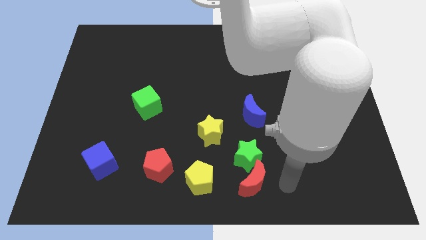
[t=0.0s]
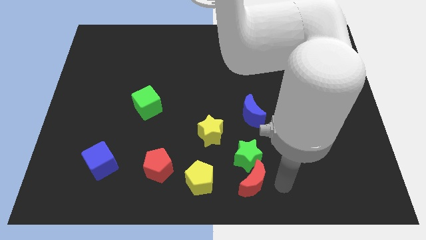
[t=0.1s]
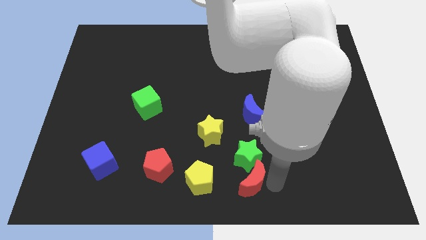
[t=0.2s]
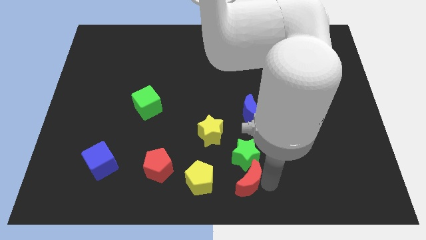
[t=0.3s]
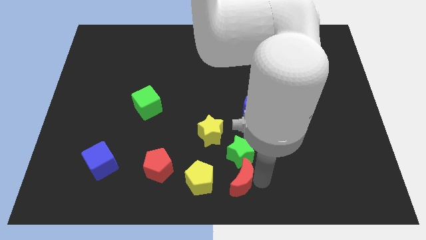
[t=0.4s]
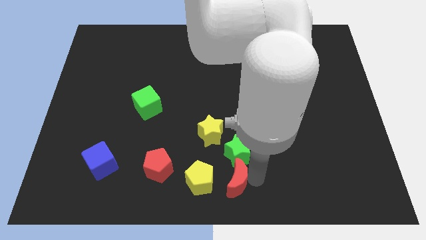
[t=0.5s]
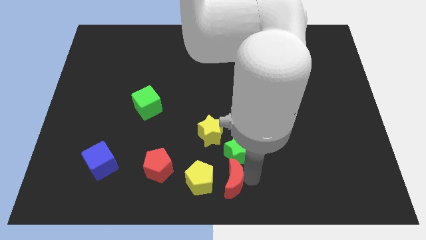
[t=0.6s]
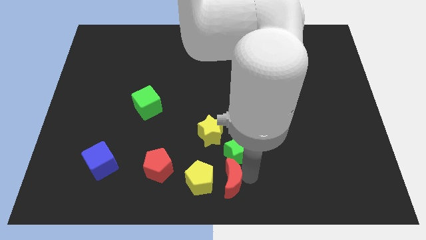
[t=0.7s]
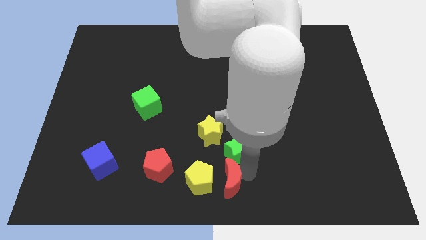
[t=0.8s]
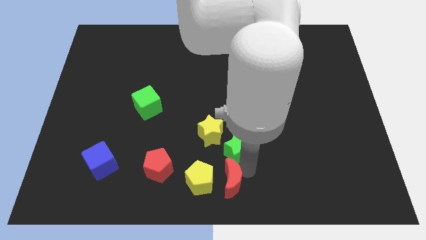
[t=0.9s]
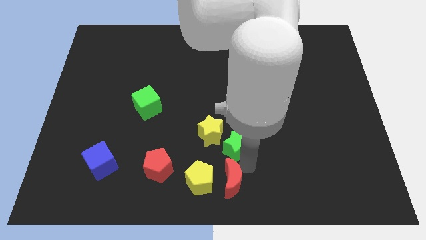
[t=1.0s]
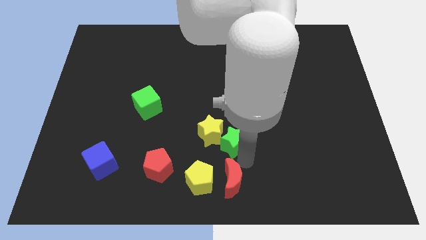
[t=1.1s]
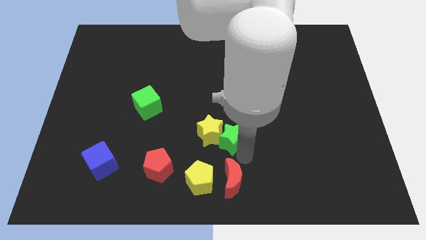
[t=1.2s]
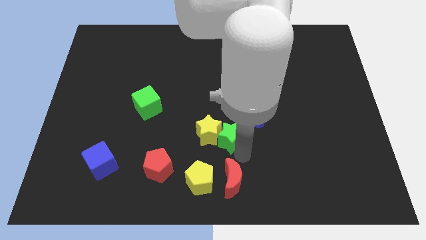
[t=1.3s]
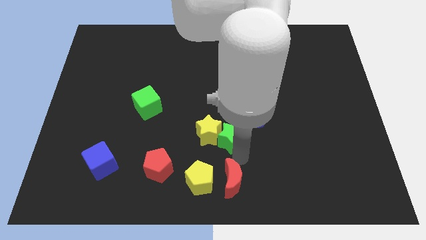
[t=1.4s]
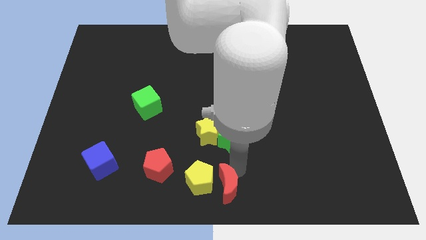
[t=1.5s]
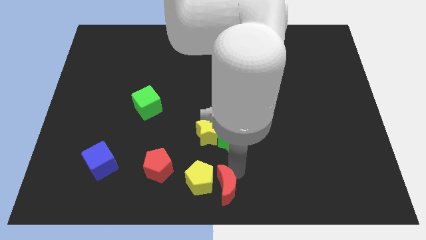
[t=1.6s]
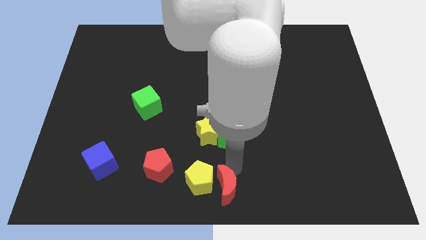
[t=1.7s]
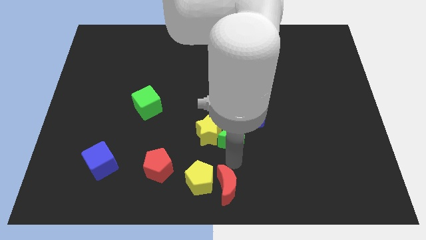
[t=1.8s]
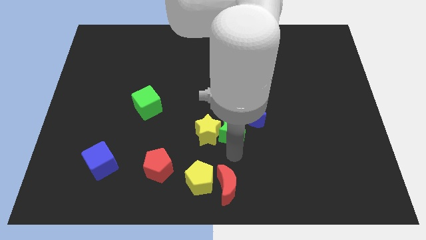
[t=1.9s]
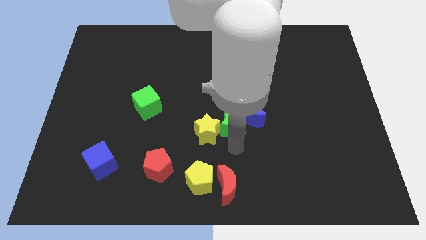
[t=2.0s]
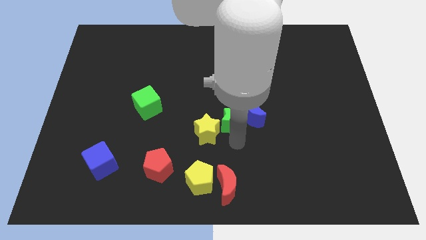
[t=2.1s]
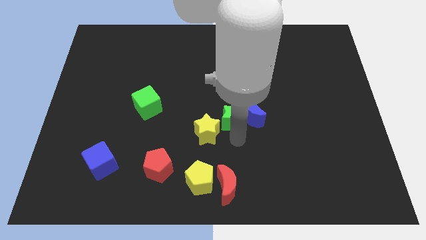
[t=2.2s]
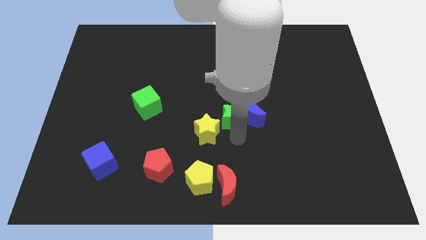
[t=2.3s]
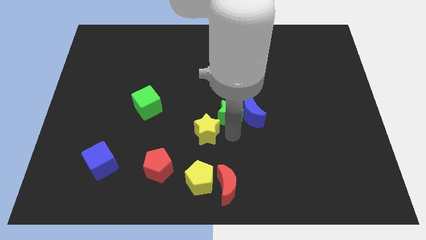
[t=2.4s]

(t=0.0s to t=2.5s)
move the green star towards the top

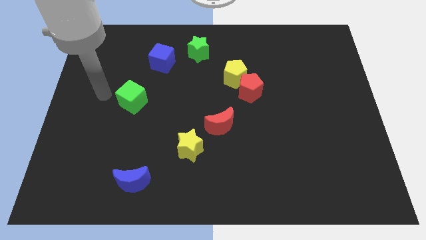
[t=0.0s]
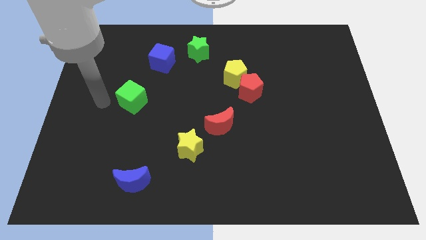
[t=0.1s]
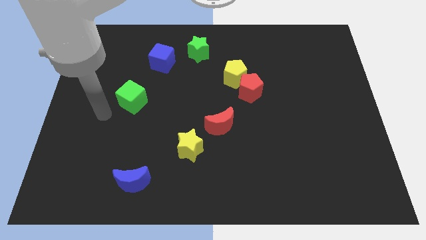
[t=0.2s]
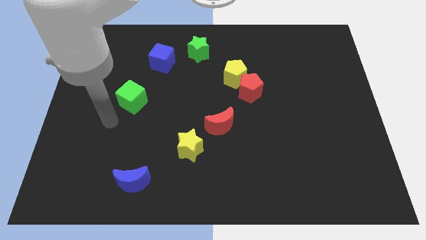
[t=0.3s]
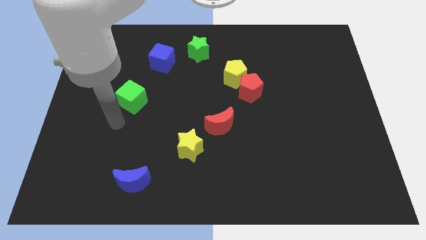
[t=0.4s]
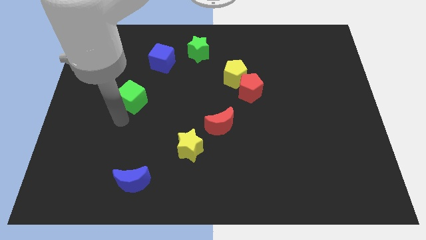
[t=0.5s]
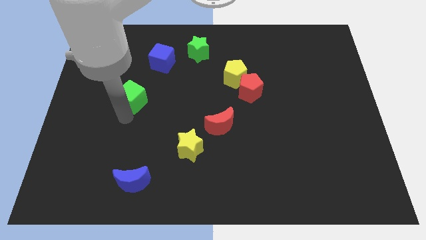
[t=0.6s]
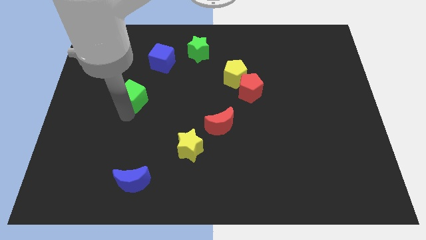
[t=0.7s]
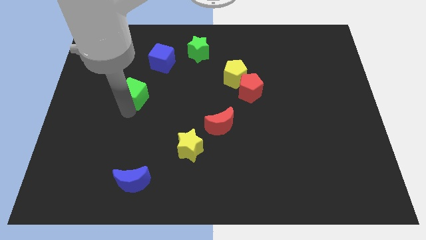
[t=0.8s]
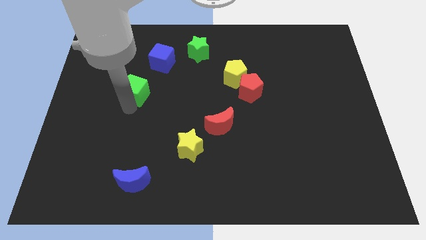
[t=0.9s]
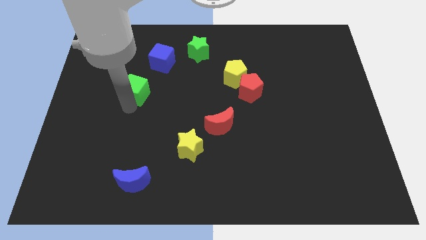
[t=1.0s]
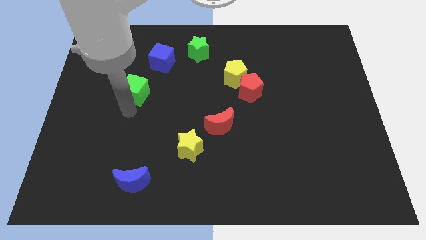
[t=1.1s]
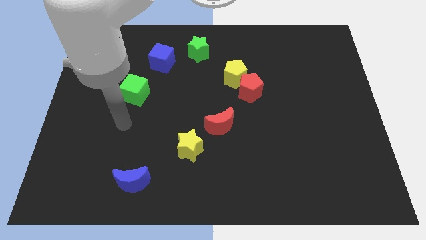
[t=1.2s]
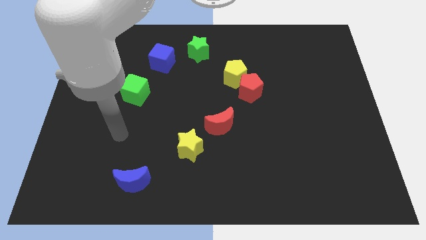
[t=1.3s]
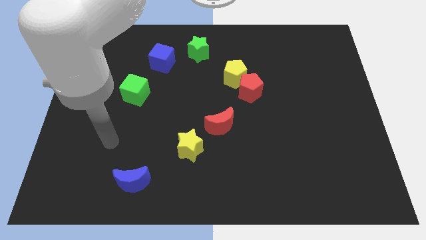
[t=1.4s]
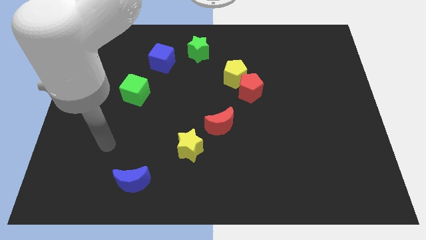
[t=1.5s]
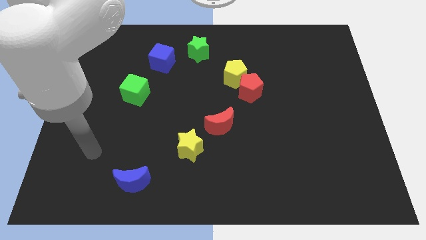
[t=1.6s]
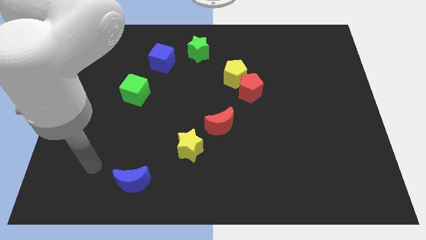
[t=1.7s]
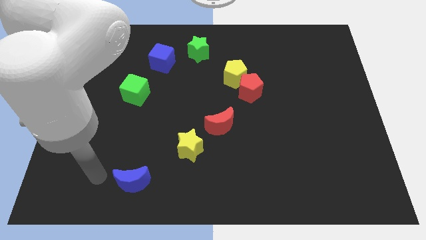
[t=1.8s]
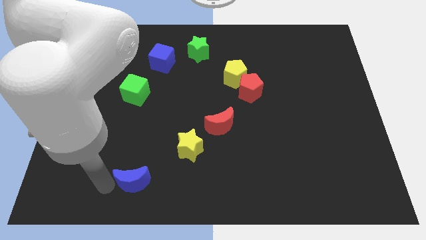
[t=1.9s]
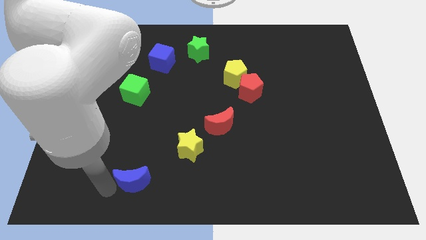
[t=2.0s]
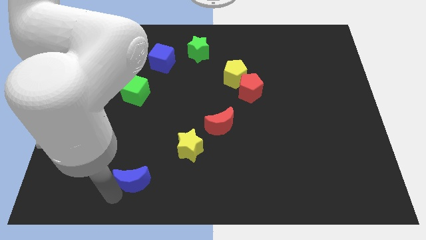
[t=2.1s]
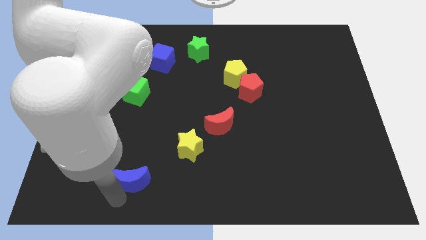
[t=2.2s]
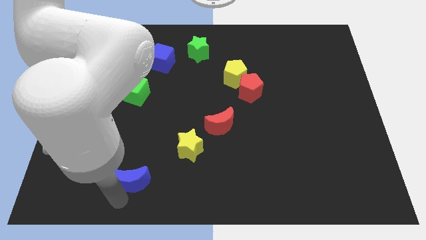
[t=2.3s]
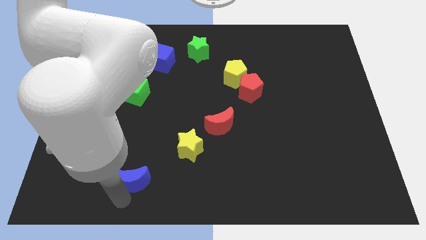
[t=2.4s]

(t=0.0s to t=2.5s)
place the arm down to the blue moon

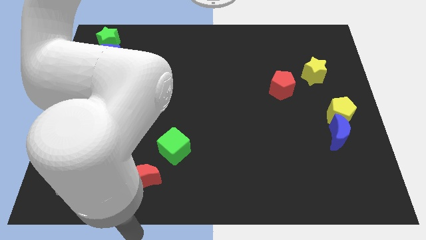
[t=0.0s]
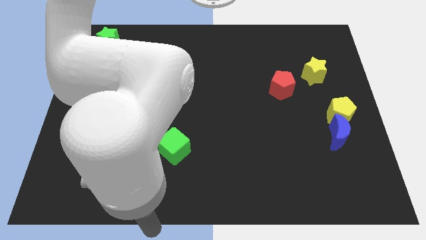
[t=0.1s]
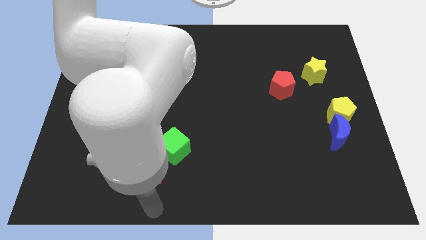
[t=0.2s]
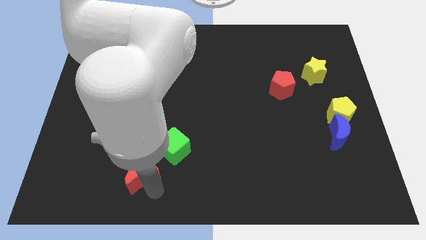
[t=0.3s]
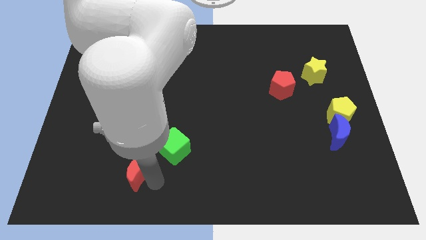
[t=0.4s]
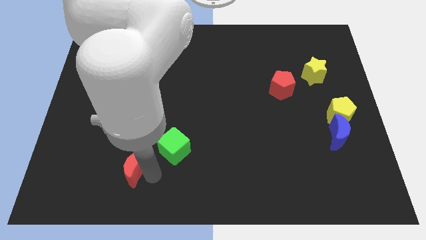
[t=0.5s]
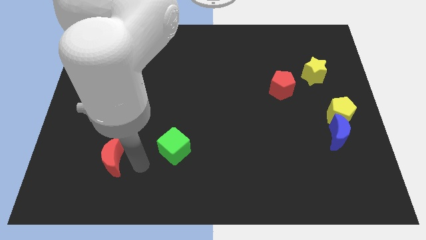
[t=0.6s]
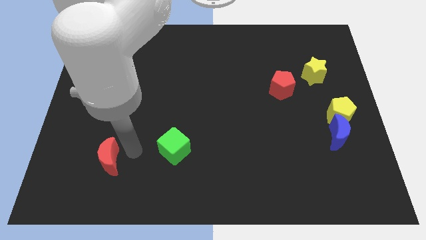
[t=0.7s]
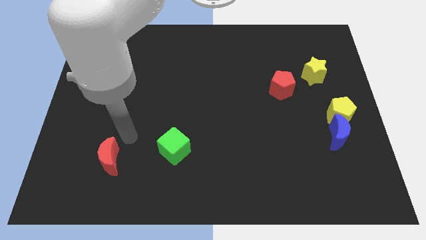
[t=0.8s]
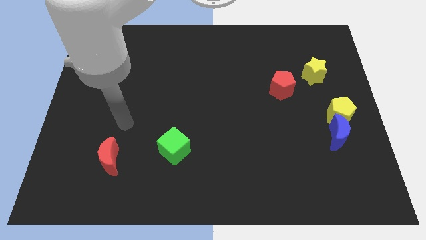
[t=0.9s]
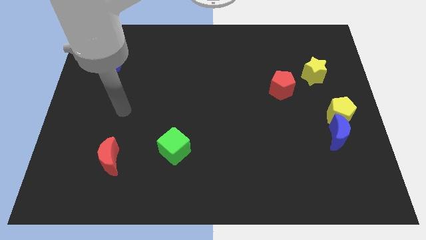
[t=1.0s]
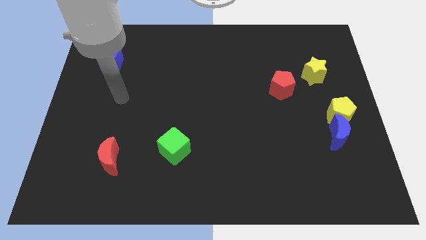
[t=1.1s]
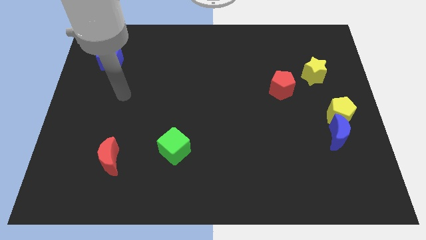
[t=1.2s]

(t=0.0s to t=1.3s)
slightly push the red crescent towards the left of the board

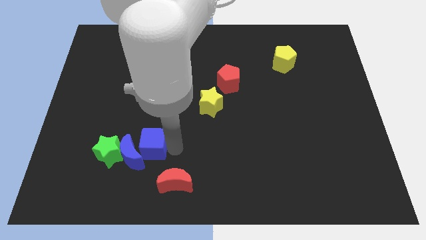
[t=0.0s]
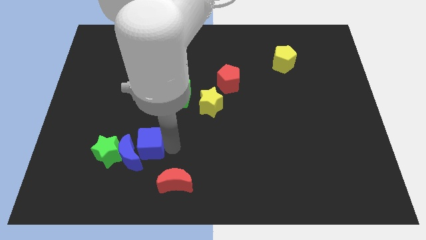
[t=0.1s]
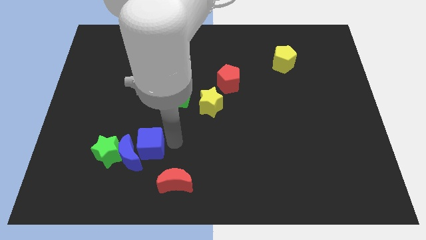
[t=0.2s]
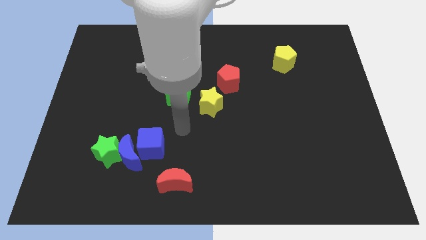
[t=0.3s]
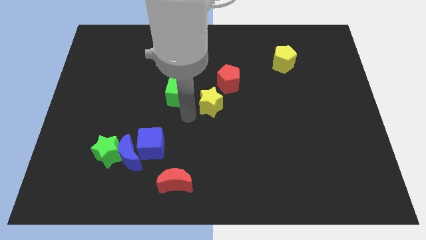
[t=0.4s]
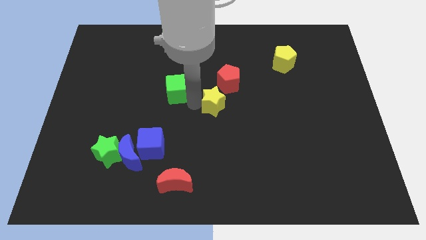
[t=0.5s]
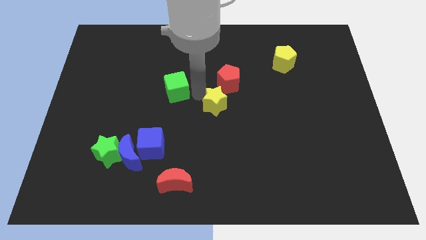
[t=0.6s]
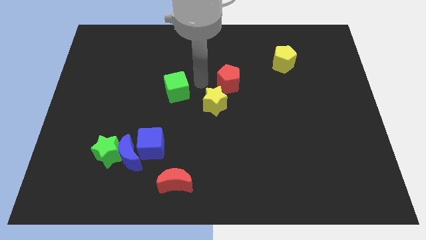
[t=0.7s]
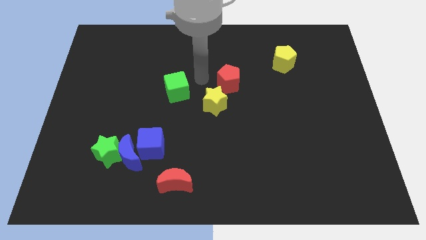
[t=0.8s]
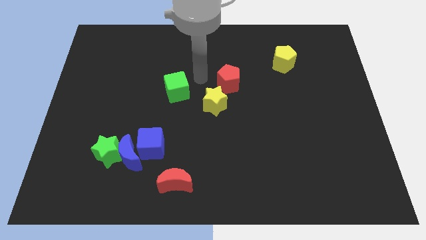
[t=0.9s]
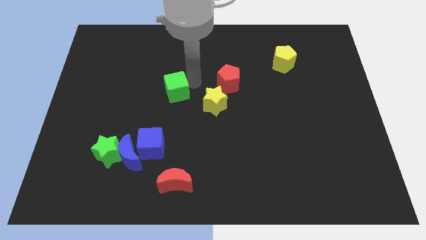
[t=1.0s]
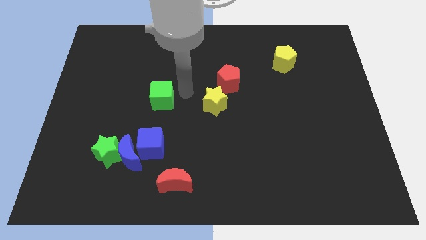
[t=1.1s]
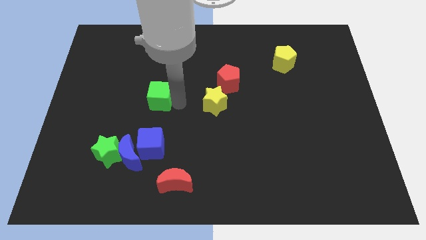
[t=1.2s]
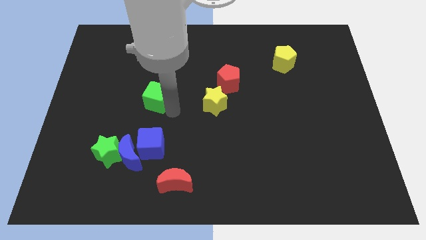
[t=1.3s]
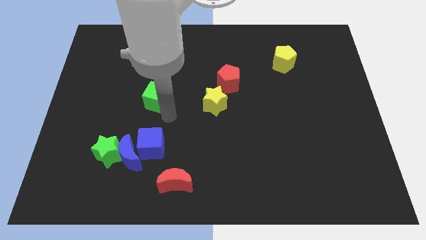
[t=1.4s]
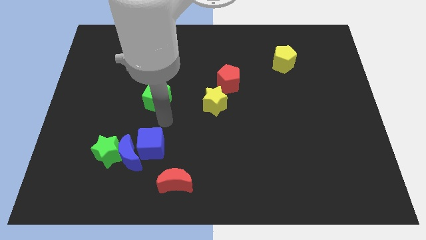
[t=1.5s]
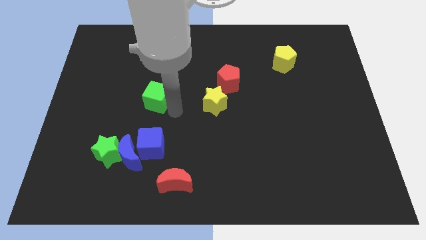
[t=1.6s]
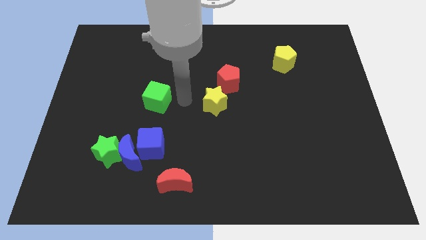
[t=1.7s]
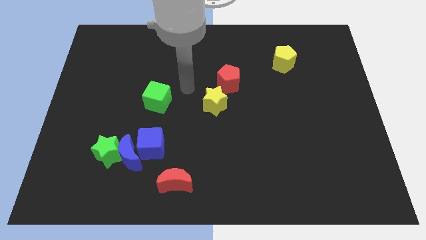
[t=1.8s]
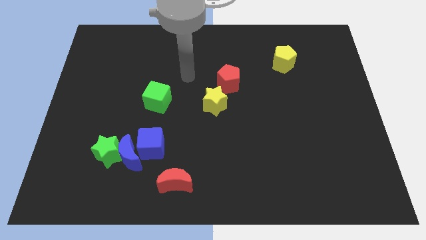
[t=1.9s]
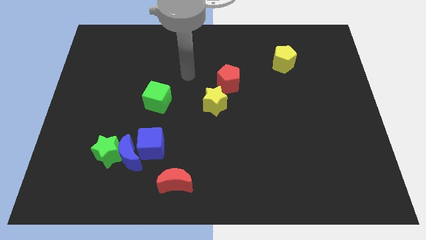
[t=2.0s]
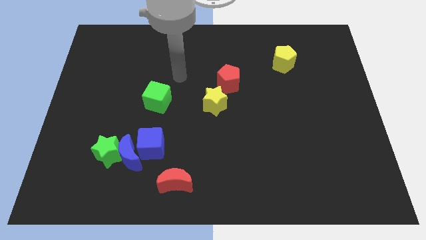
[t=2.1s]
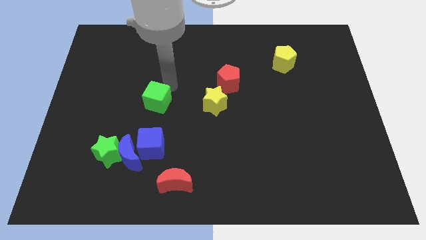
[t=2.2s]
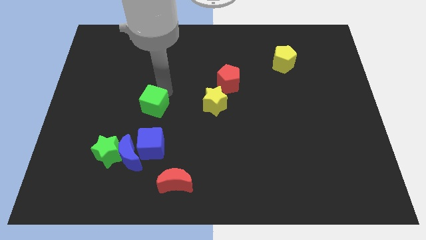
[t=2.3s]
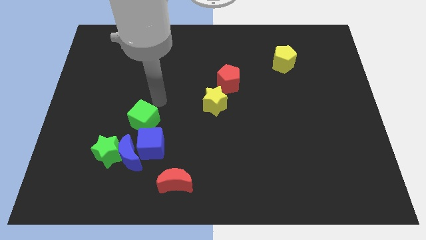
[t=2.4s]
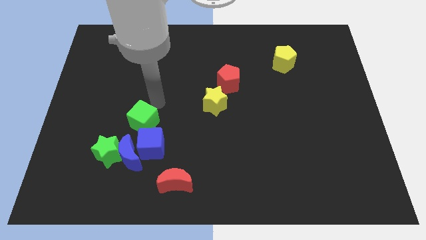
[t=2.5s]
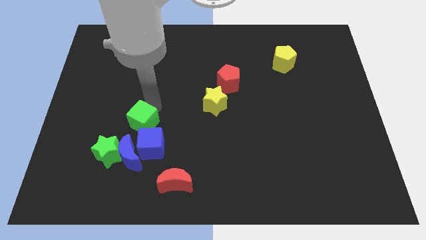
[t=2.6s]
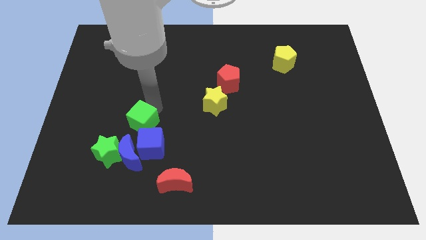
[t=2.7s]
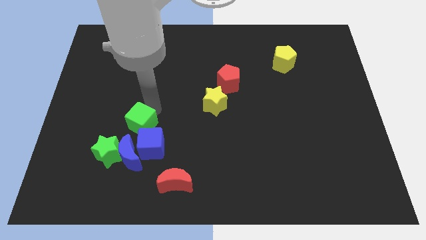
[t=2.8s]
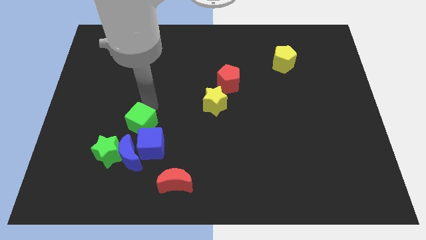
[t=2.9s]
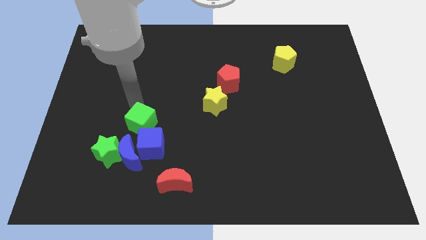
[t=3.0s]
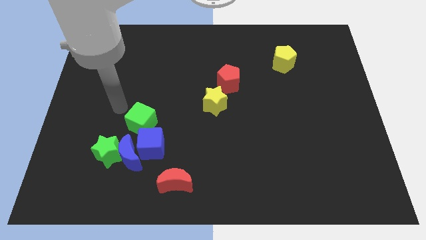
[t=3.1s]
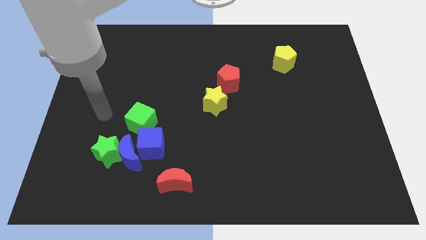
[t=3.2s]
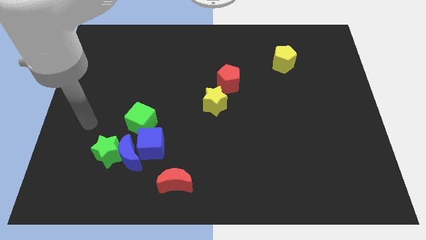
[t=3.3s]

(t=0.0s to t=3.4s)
move green cube into blue cube
